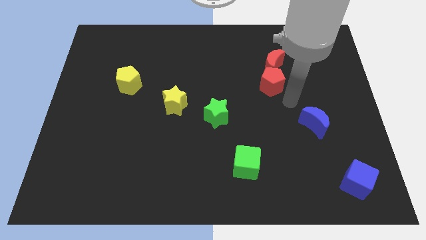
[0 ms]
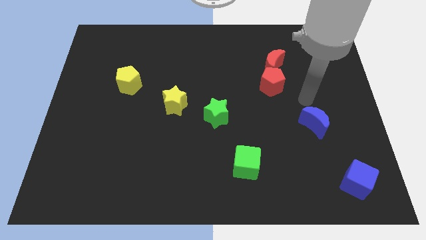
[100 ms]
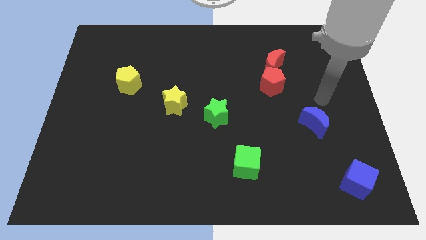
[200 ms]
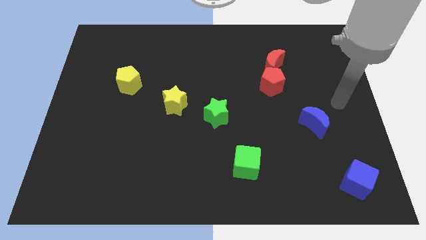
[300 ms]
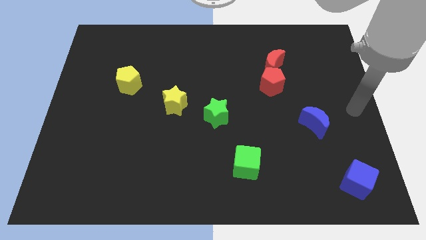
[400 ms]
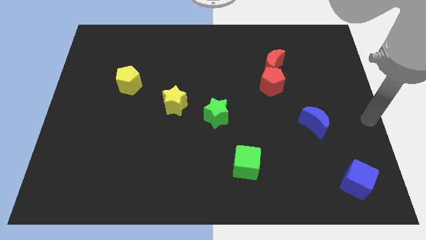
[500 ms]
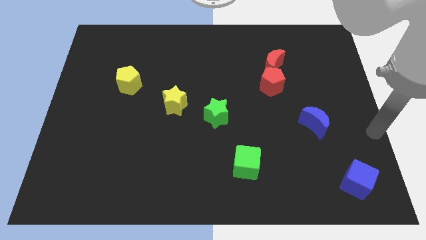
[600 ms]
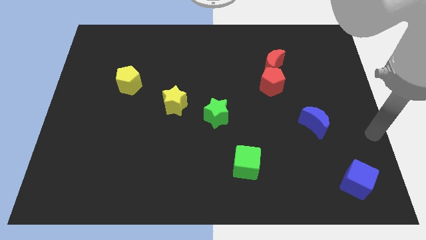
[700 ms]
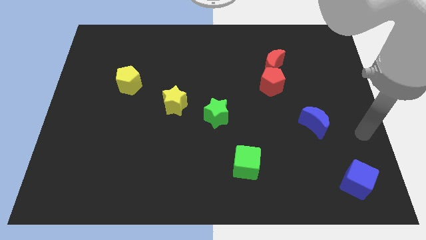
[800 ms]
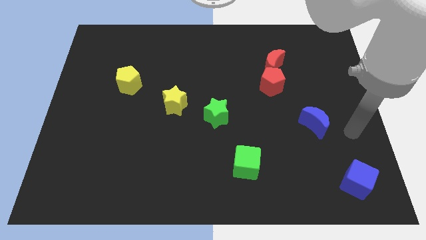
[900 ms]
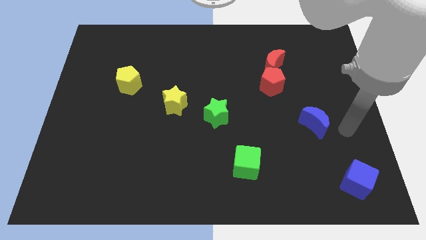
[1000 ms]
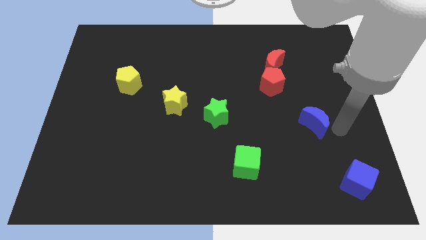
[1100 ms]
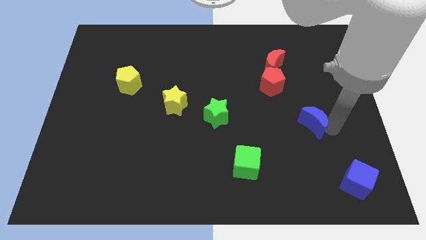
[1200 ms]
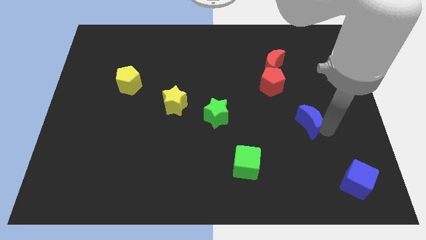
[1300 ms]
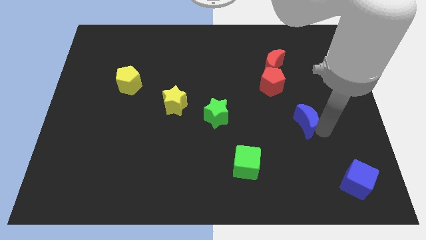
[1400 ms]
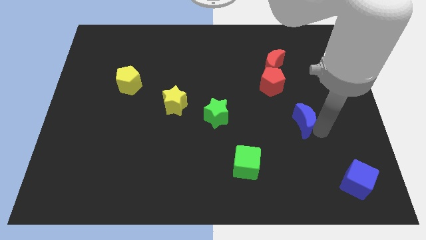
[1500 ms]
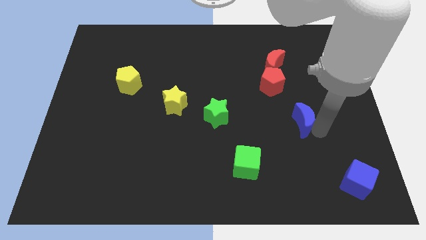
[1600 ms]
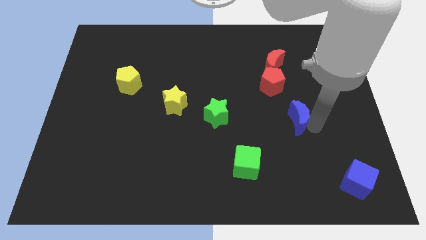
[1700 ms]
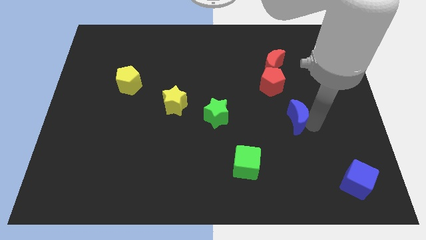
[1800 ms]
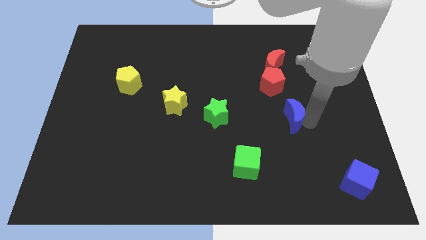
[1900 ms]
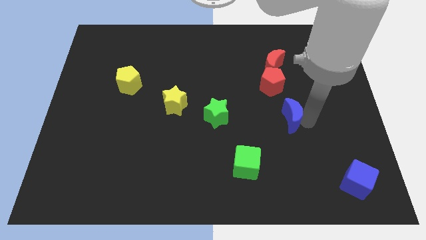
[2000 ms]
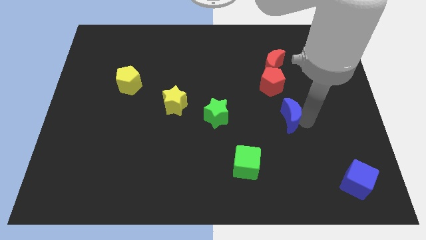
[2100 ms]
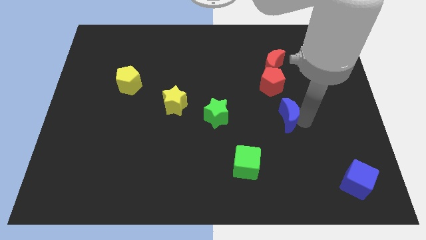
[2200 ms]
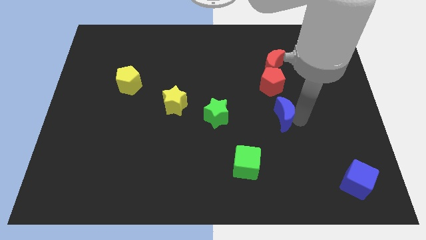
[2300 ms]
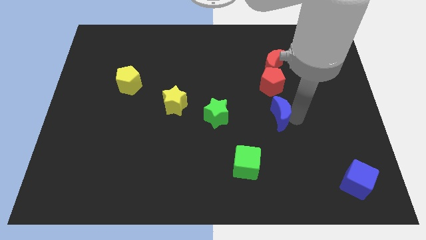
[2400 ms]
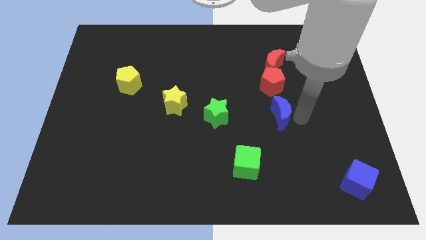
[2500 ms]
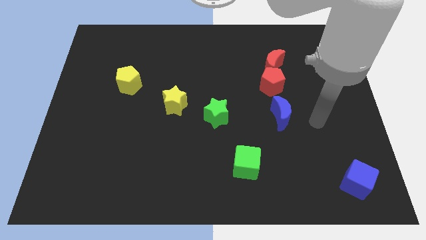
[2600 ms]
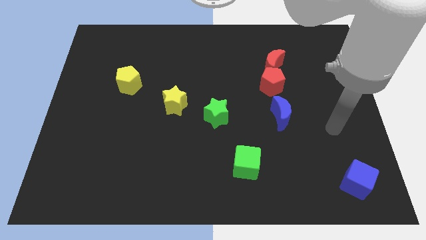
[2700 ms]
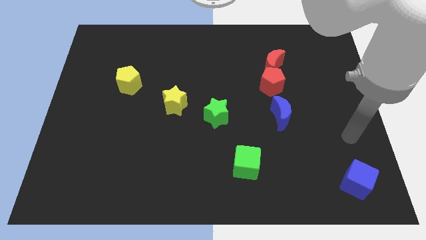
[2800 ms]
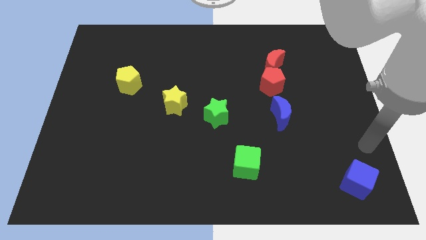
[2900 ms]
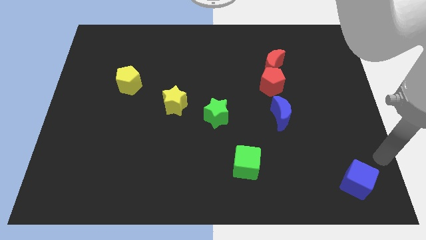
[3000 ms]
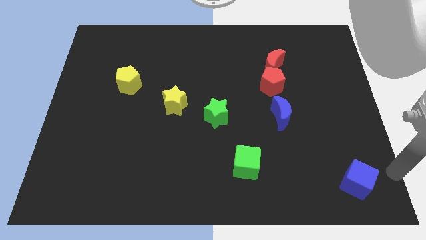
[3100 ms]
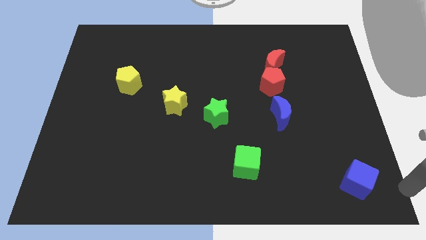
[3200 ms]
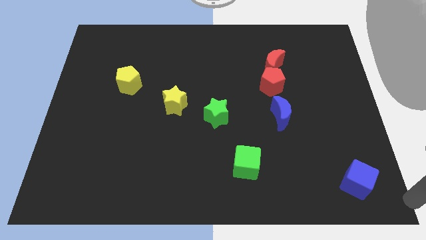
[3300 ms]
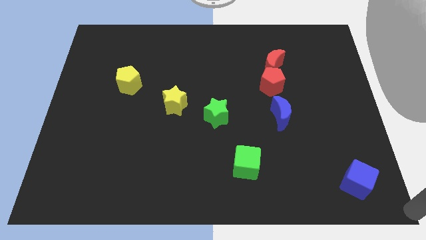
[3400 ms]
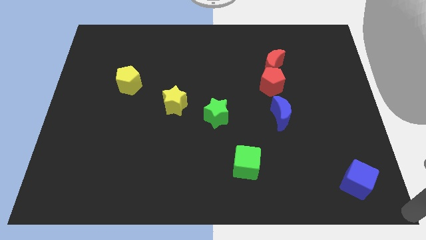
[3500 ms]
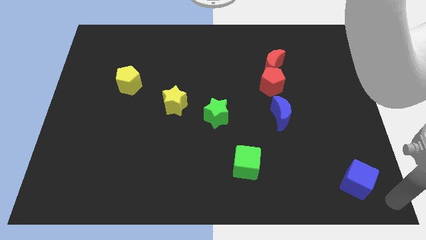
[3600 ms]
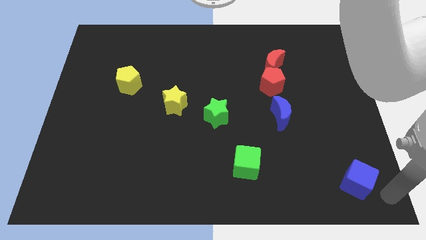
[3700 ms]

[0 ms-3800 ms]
push the blue crescent to the bottom of the red pentagon

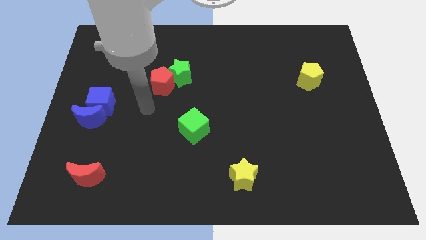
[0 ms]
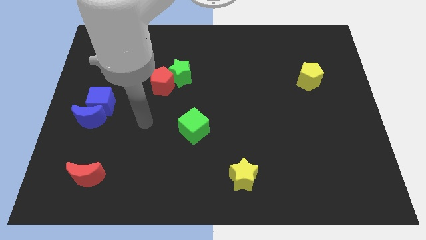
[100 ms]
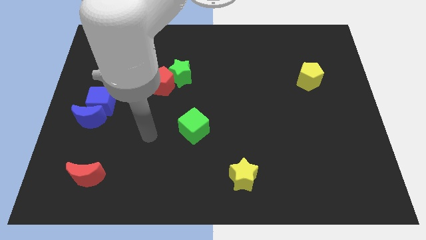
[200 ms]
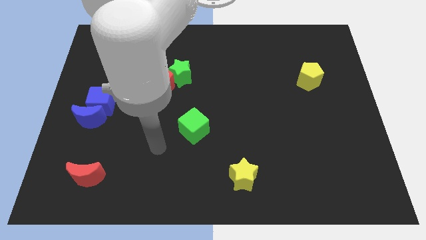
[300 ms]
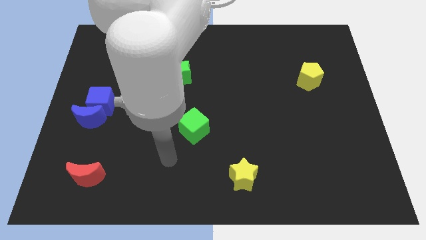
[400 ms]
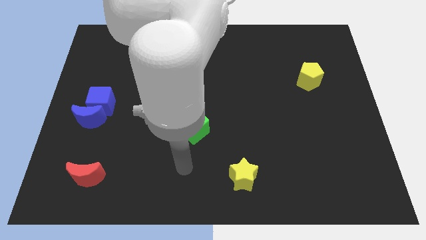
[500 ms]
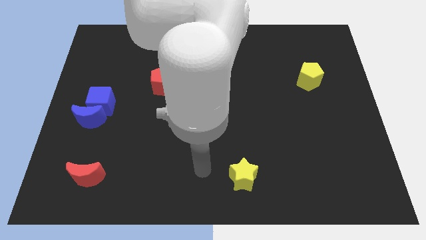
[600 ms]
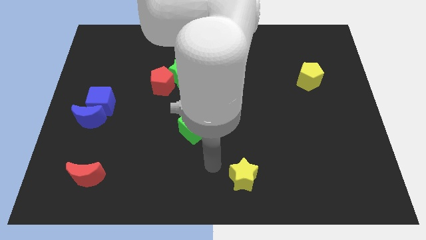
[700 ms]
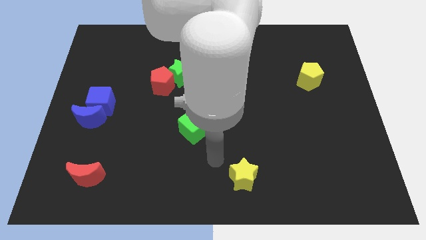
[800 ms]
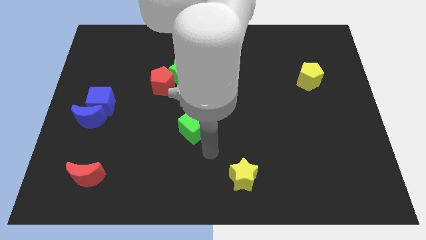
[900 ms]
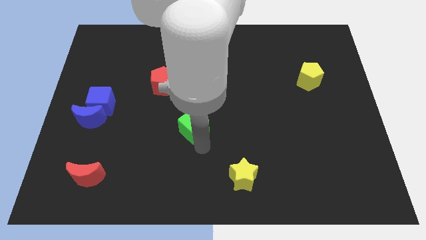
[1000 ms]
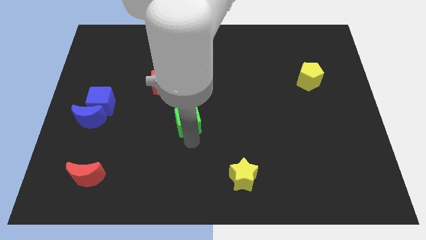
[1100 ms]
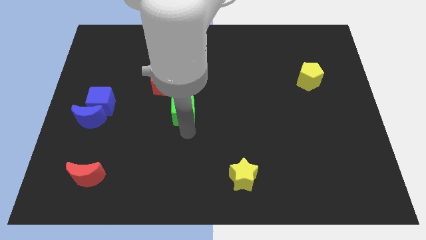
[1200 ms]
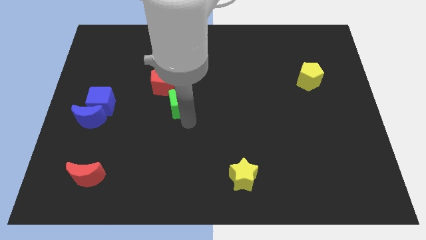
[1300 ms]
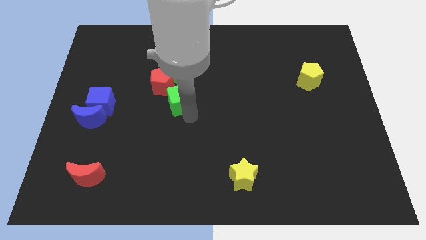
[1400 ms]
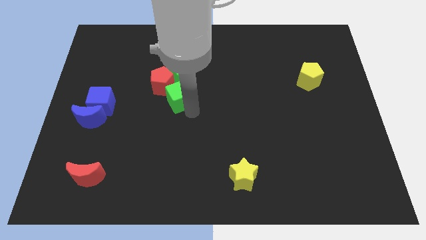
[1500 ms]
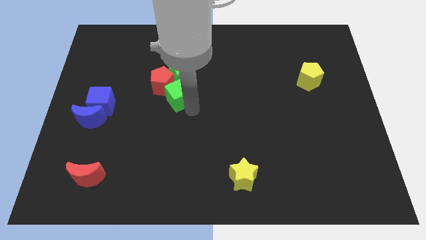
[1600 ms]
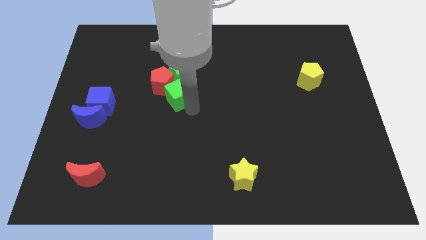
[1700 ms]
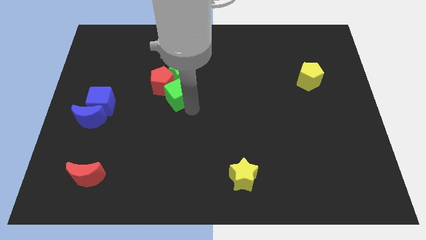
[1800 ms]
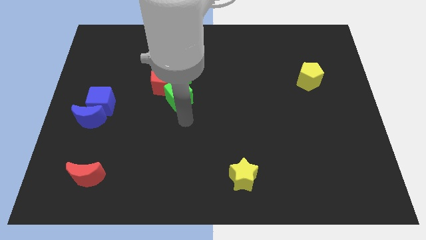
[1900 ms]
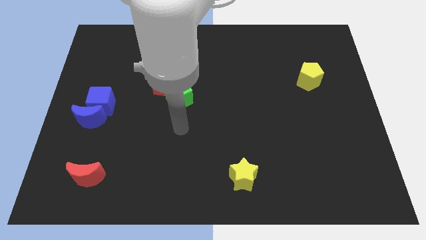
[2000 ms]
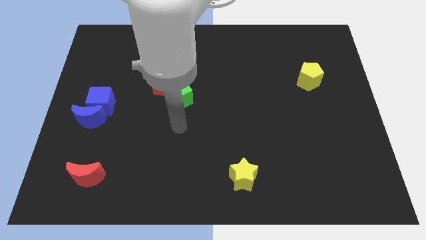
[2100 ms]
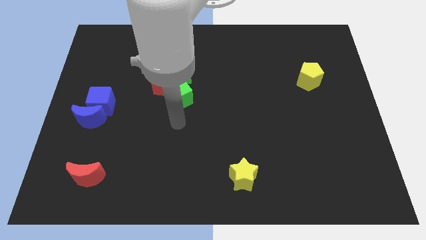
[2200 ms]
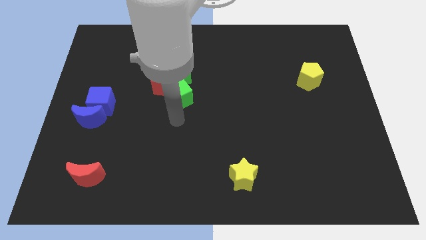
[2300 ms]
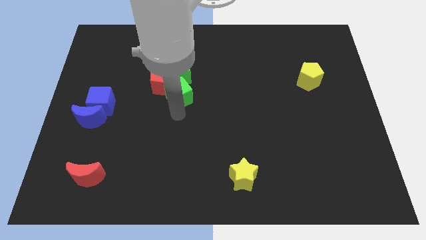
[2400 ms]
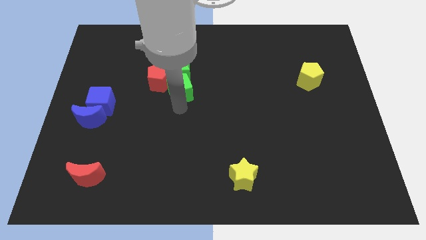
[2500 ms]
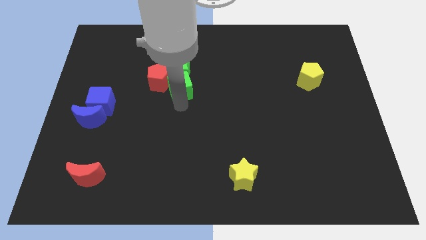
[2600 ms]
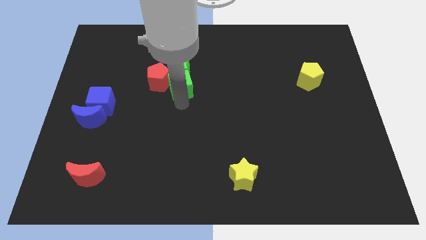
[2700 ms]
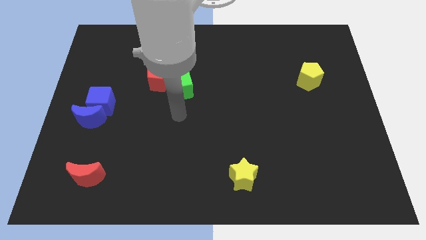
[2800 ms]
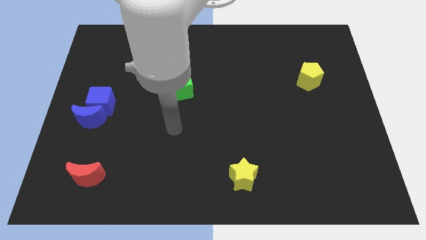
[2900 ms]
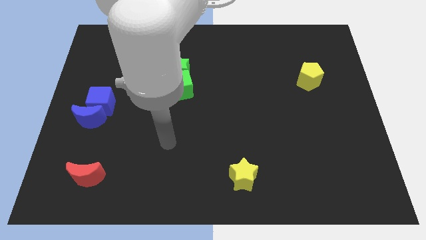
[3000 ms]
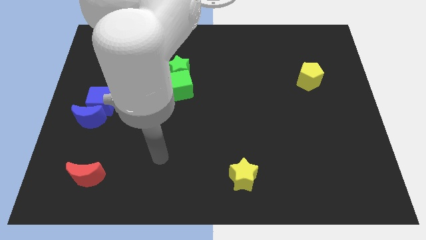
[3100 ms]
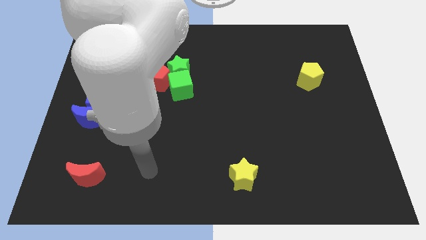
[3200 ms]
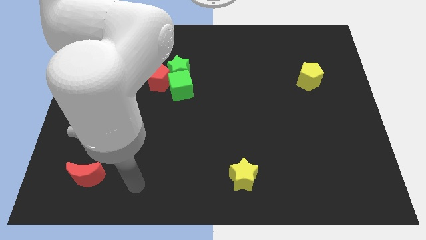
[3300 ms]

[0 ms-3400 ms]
push the green cube to the bottom of green star

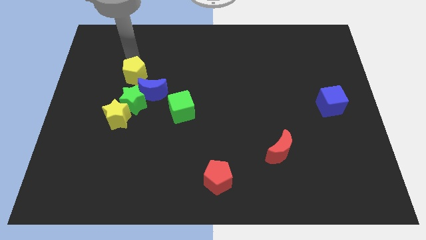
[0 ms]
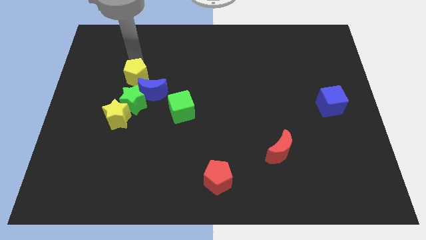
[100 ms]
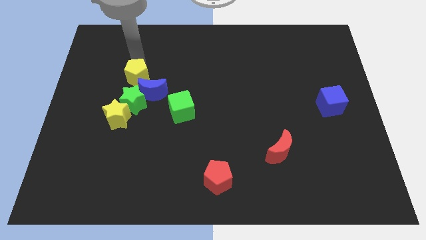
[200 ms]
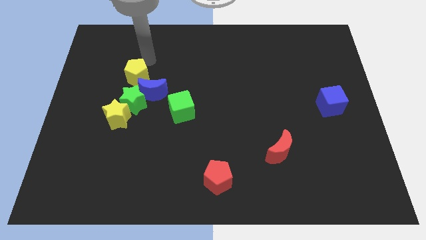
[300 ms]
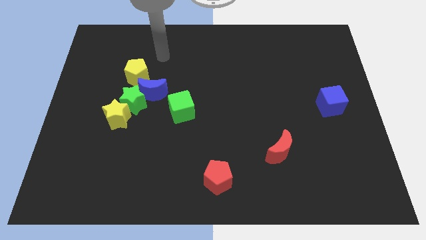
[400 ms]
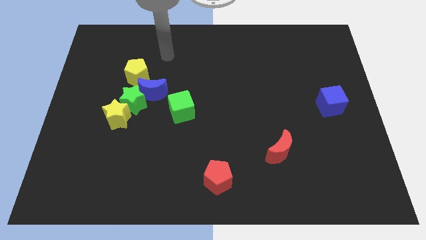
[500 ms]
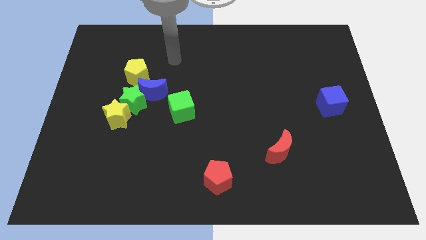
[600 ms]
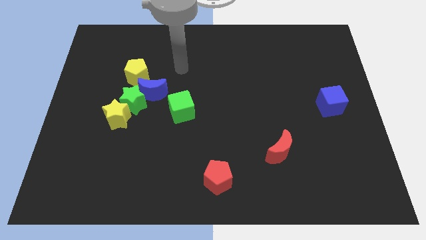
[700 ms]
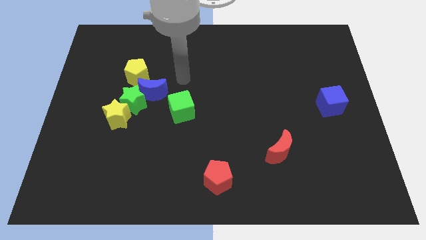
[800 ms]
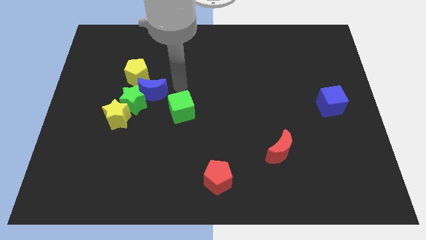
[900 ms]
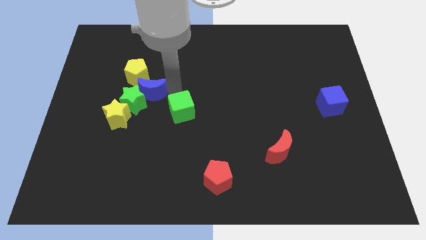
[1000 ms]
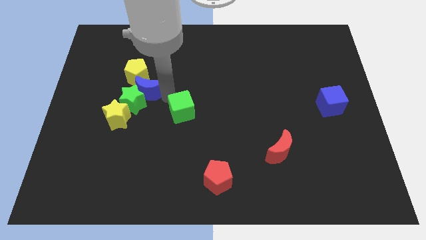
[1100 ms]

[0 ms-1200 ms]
move your arm to the top of the green cube

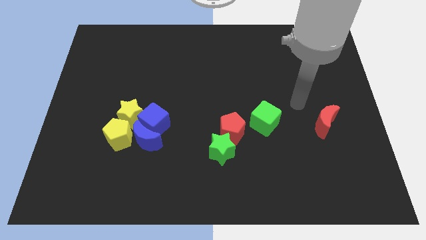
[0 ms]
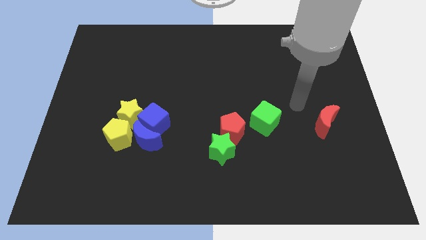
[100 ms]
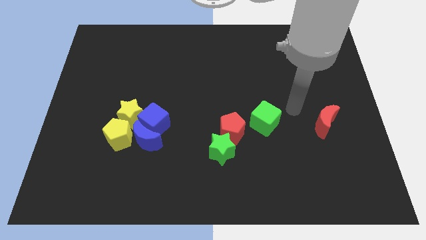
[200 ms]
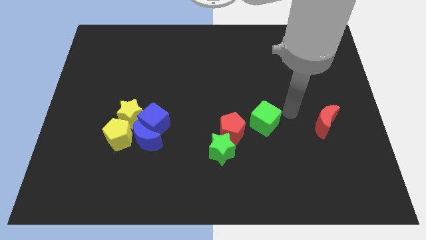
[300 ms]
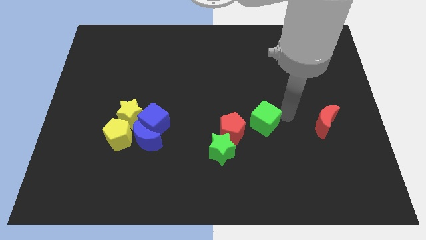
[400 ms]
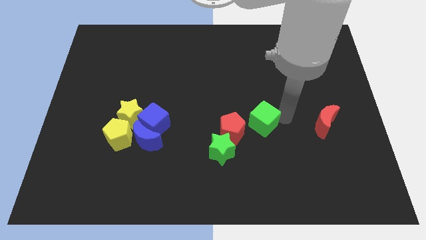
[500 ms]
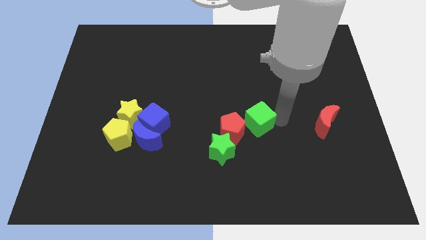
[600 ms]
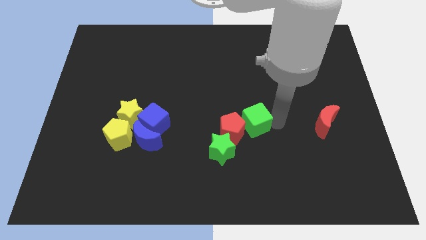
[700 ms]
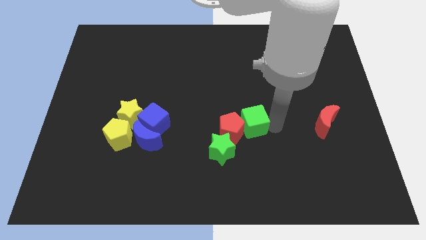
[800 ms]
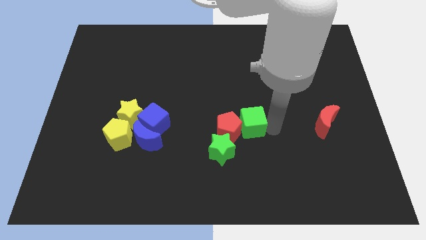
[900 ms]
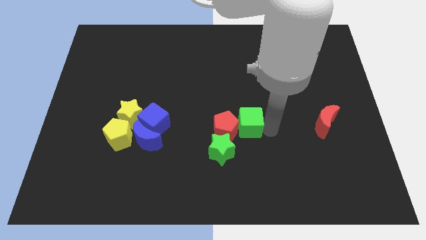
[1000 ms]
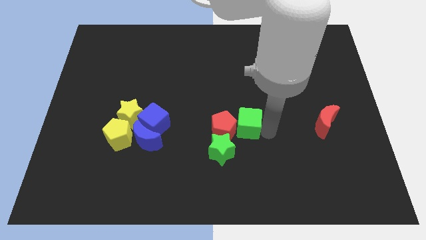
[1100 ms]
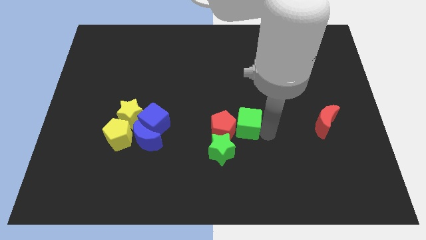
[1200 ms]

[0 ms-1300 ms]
place green cube right to the red pentagon
